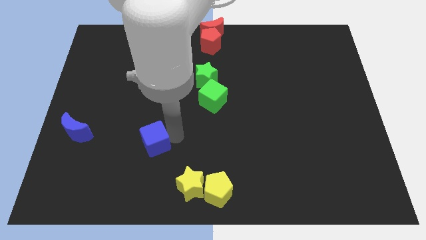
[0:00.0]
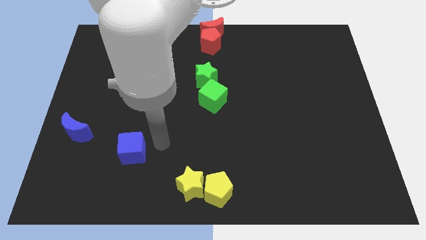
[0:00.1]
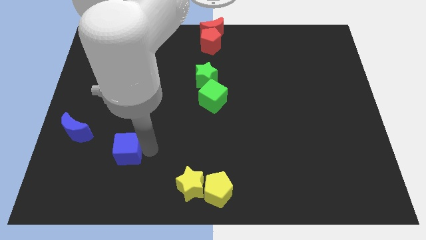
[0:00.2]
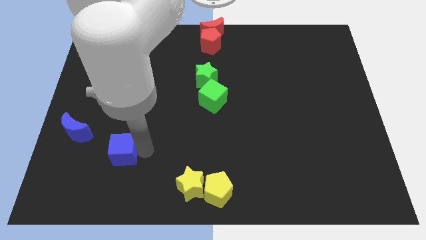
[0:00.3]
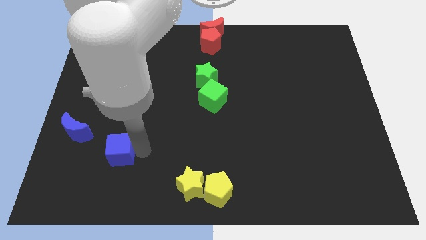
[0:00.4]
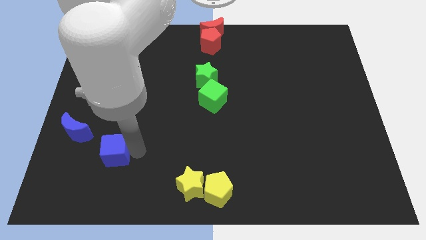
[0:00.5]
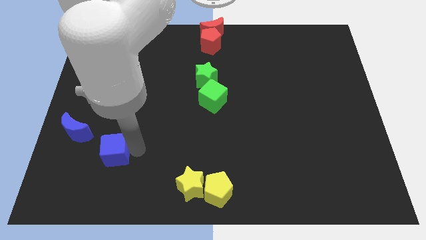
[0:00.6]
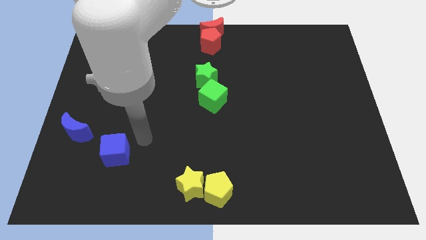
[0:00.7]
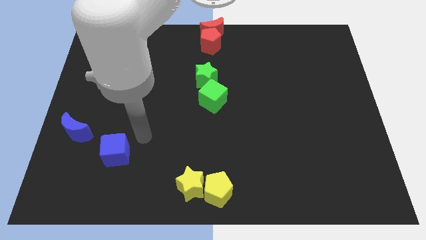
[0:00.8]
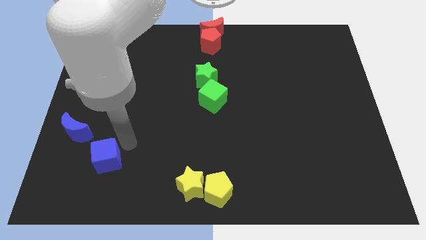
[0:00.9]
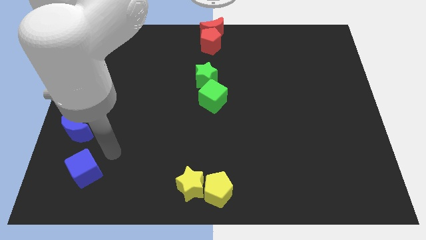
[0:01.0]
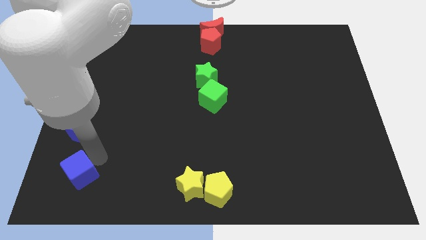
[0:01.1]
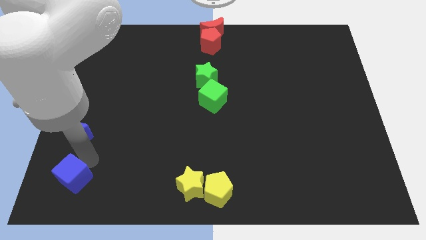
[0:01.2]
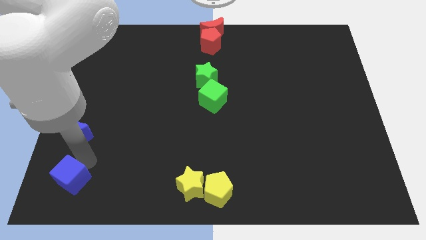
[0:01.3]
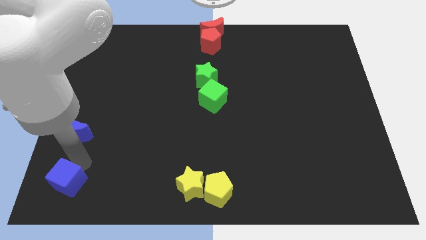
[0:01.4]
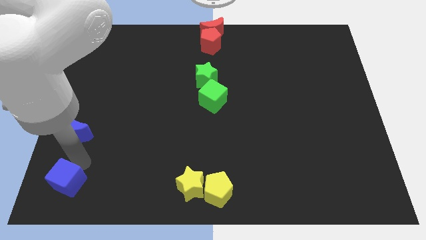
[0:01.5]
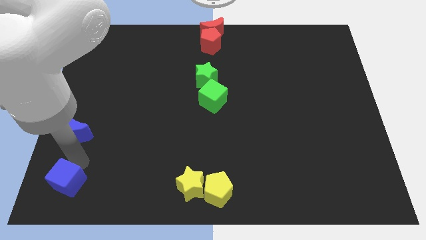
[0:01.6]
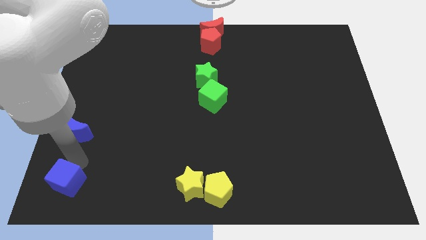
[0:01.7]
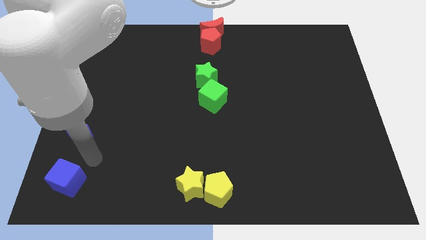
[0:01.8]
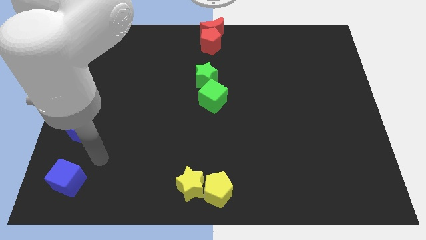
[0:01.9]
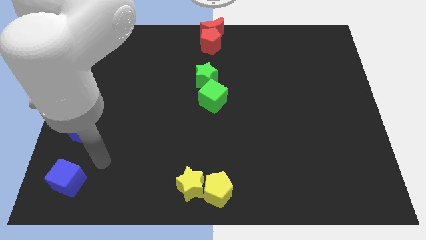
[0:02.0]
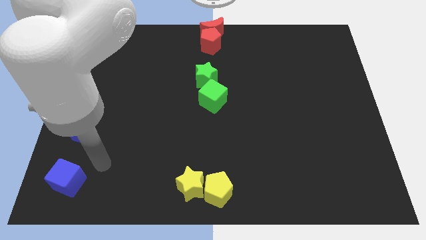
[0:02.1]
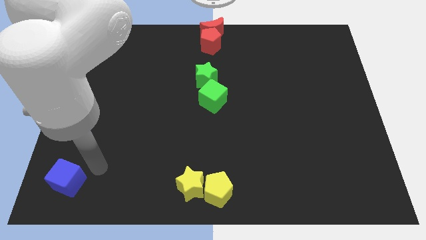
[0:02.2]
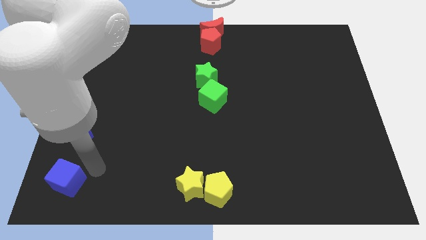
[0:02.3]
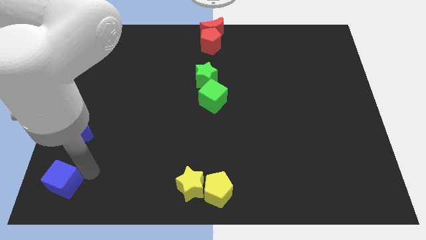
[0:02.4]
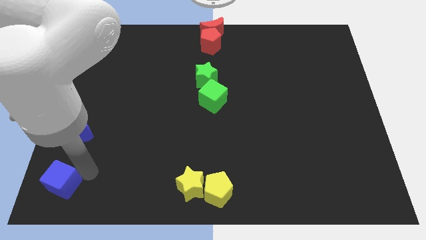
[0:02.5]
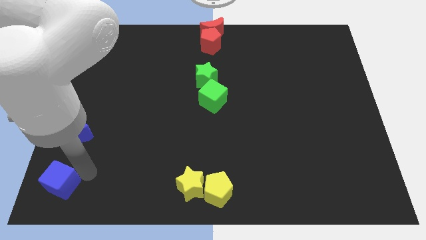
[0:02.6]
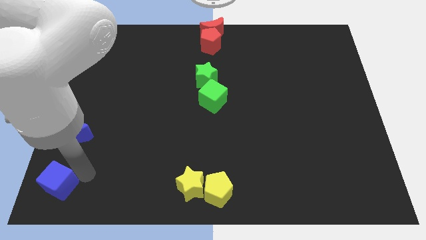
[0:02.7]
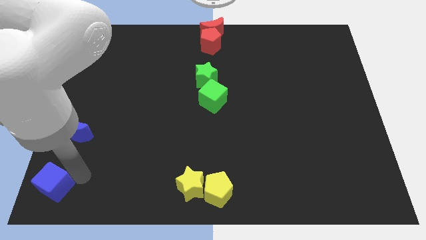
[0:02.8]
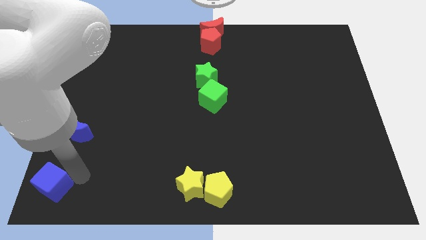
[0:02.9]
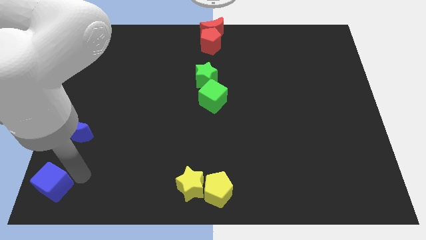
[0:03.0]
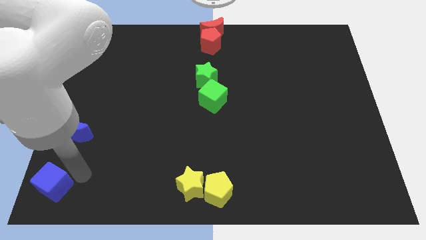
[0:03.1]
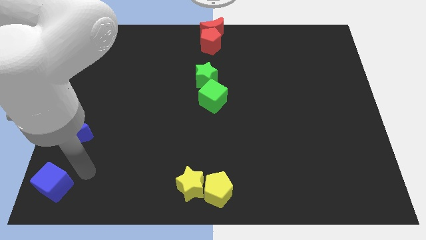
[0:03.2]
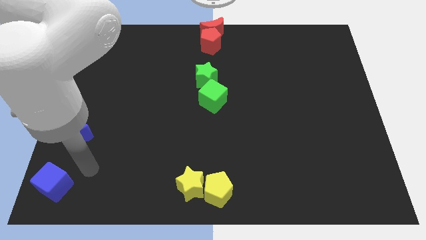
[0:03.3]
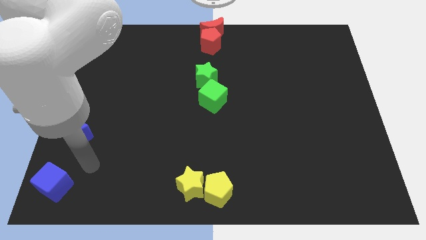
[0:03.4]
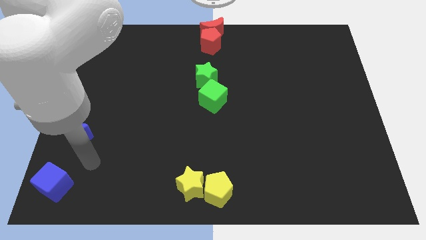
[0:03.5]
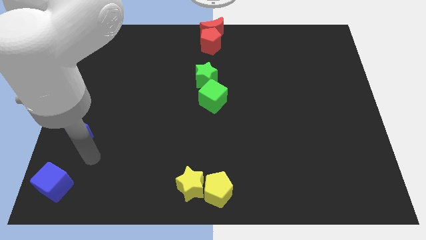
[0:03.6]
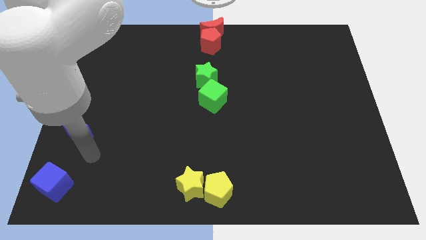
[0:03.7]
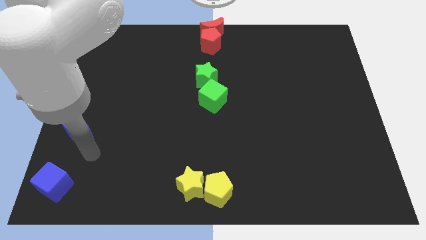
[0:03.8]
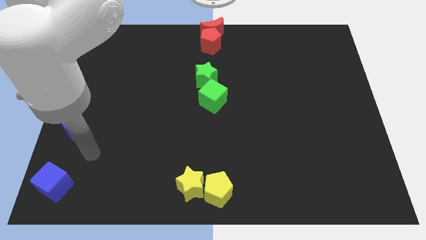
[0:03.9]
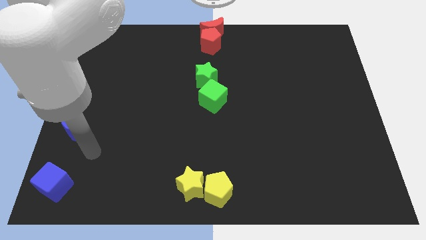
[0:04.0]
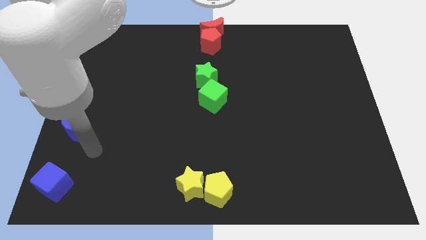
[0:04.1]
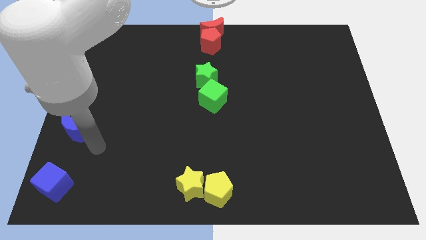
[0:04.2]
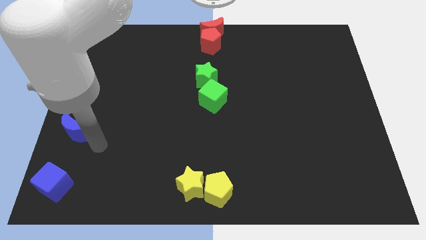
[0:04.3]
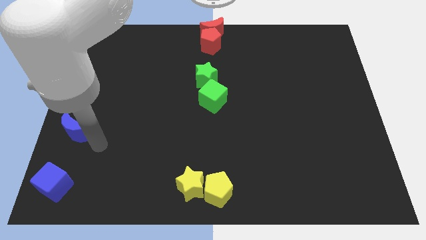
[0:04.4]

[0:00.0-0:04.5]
move the blue cube towards the bottom left corner of the board

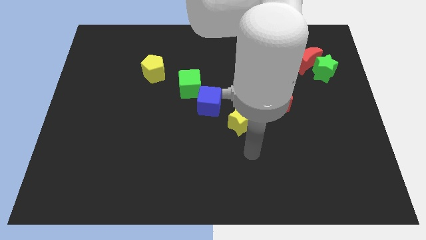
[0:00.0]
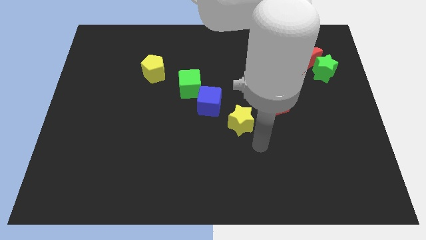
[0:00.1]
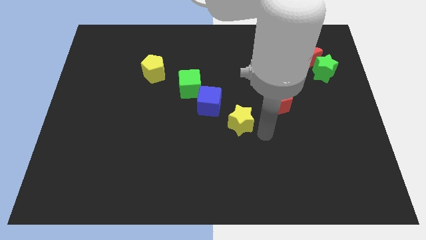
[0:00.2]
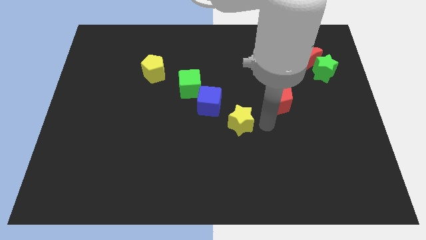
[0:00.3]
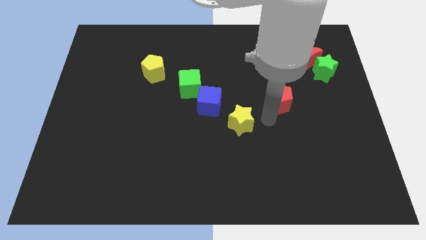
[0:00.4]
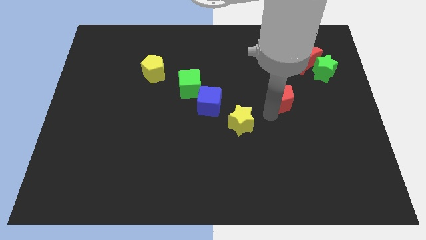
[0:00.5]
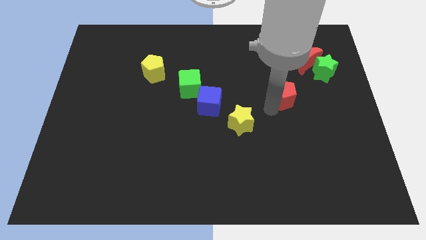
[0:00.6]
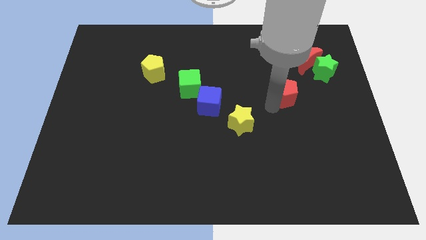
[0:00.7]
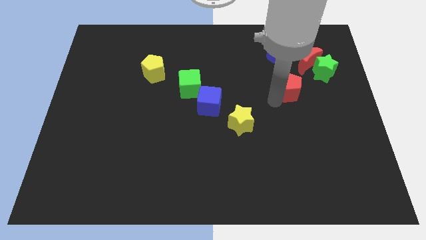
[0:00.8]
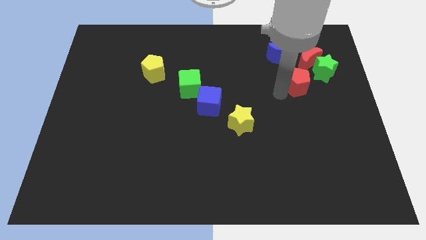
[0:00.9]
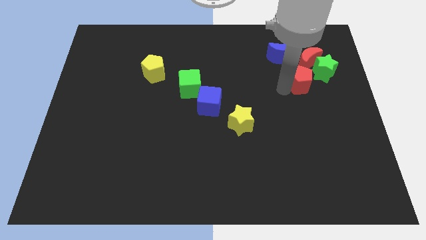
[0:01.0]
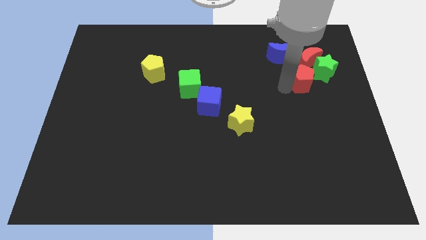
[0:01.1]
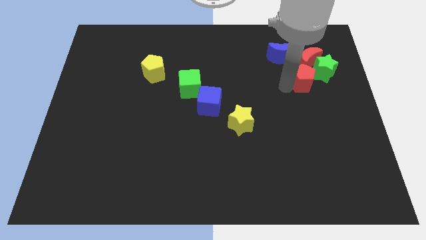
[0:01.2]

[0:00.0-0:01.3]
push the red pentagon towards the green star

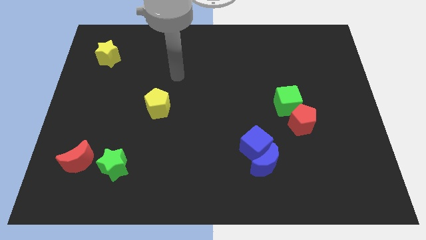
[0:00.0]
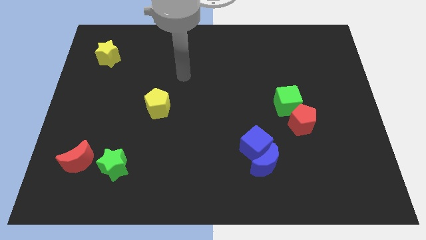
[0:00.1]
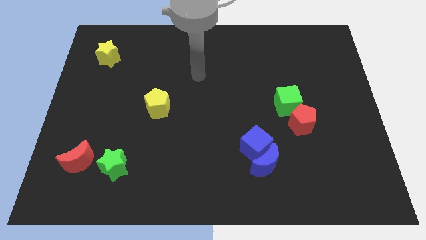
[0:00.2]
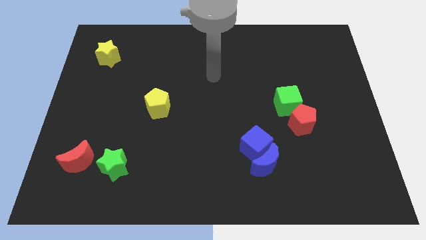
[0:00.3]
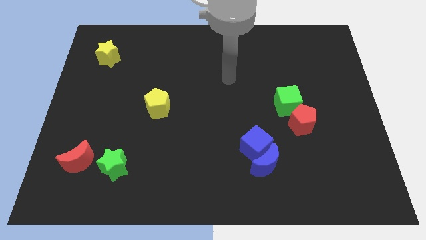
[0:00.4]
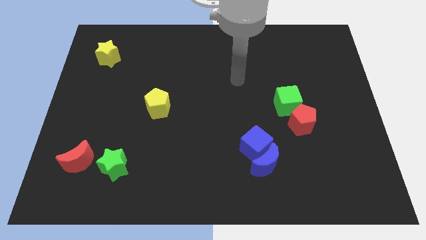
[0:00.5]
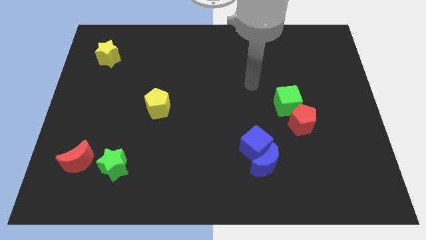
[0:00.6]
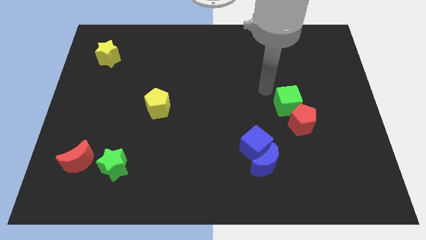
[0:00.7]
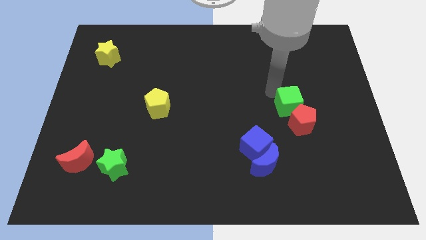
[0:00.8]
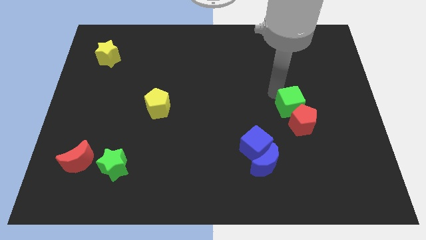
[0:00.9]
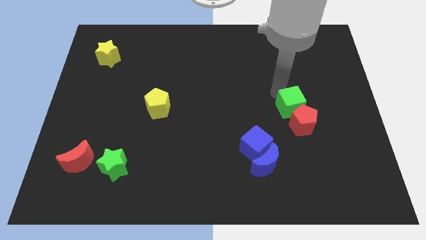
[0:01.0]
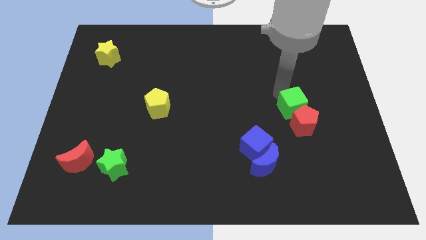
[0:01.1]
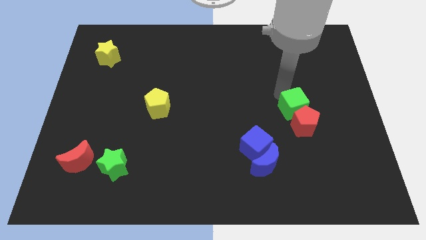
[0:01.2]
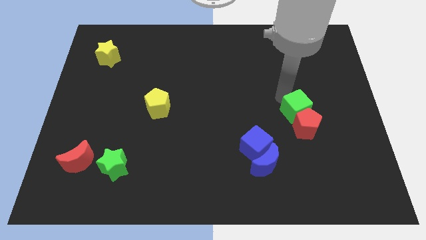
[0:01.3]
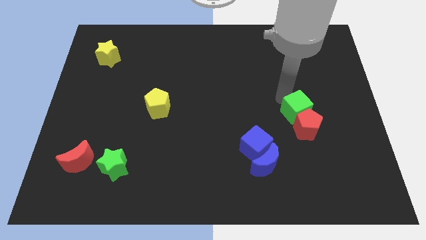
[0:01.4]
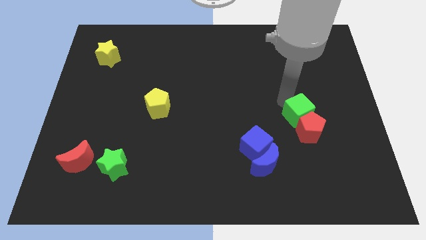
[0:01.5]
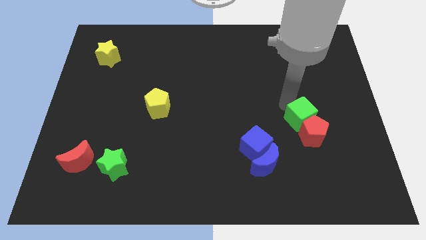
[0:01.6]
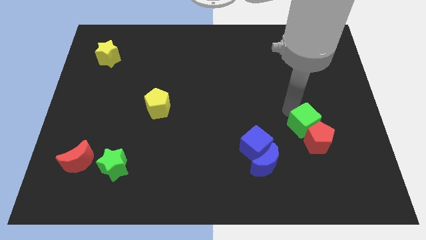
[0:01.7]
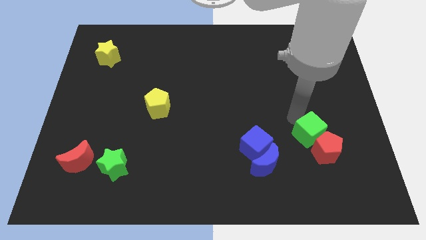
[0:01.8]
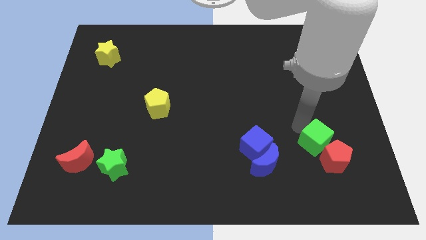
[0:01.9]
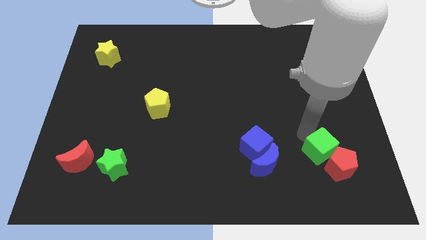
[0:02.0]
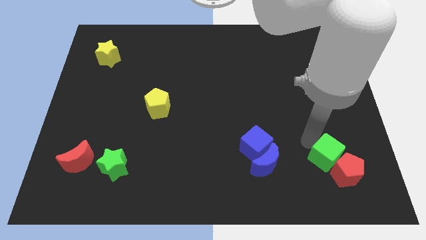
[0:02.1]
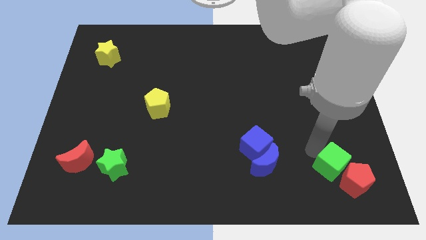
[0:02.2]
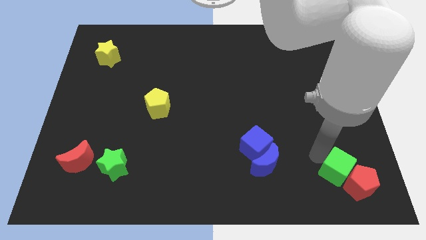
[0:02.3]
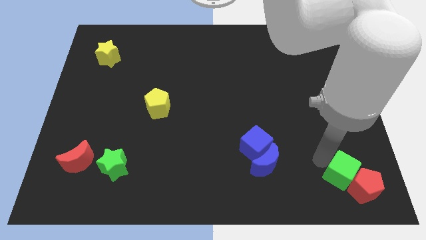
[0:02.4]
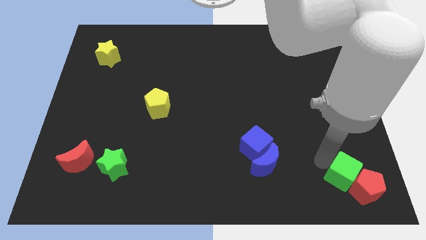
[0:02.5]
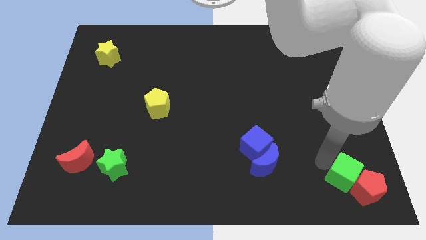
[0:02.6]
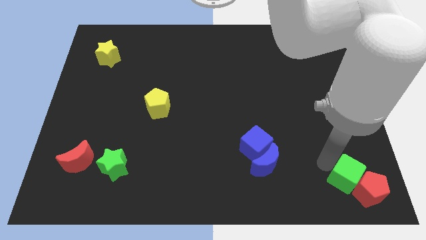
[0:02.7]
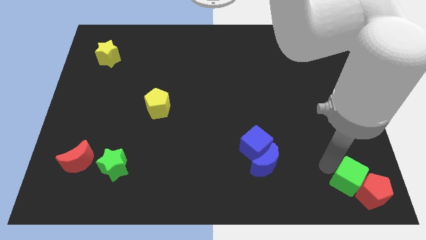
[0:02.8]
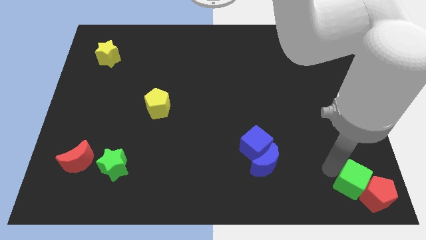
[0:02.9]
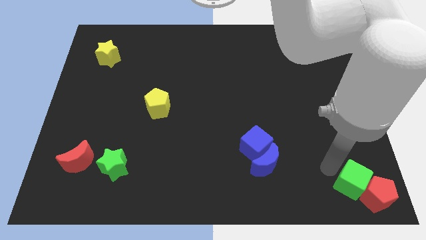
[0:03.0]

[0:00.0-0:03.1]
push the red pentagon with a green cube towards the bottom right corner of the board

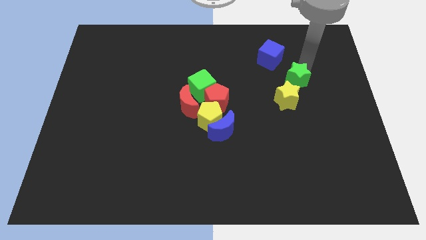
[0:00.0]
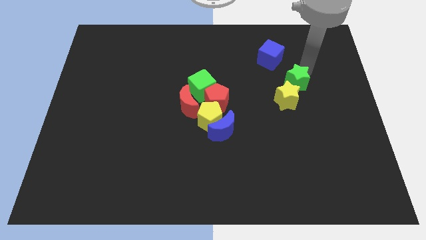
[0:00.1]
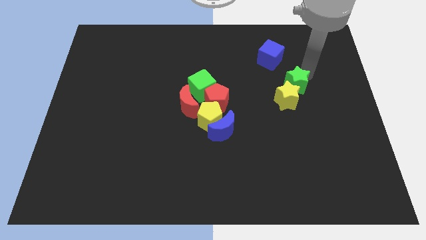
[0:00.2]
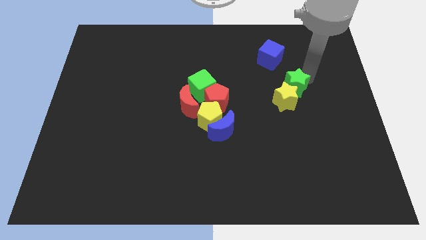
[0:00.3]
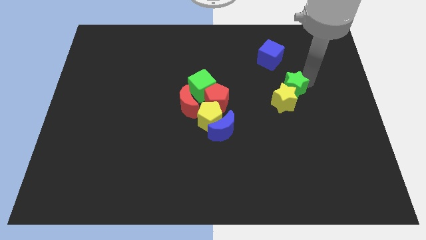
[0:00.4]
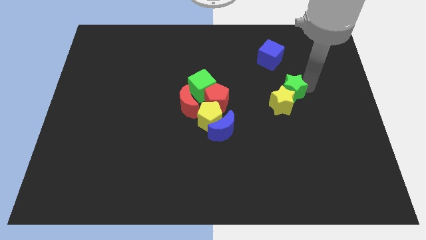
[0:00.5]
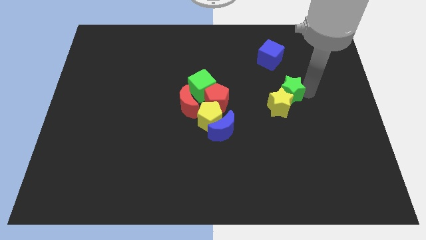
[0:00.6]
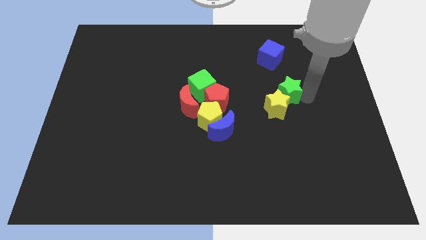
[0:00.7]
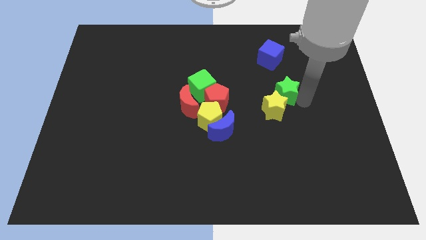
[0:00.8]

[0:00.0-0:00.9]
place green and yellow starts slightly down
